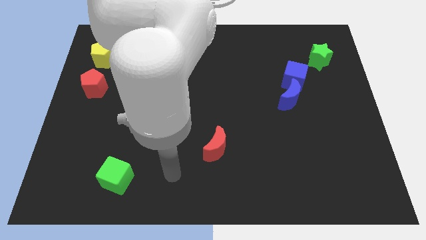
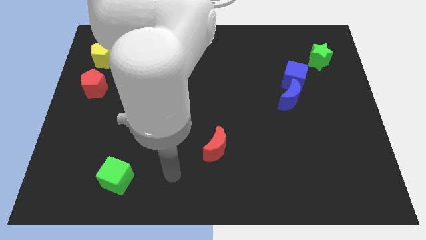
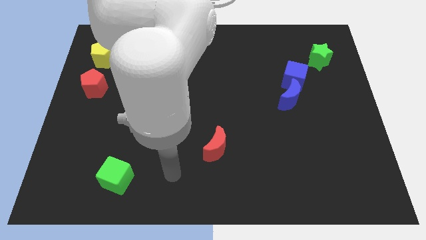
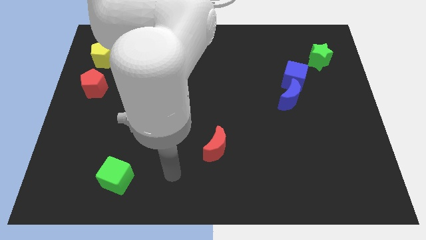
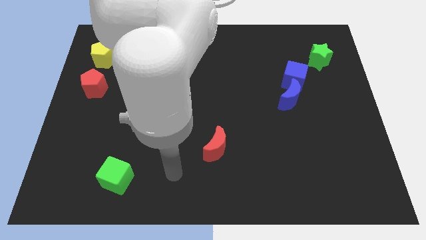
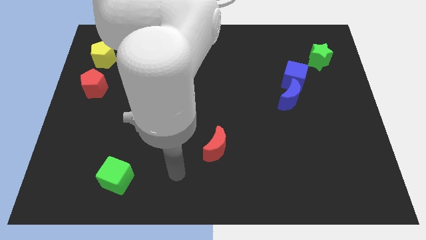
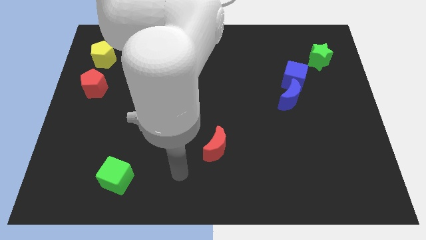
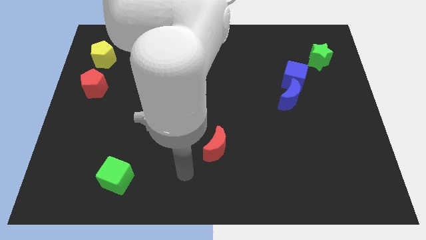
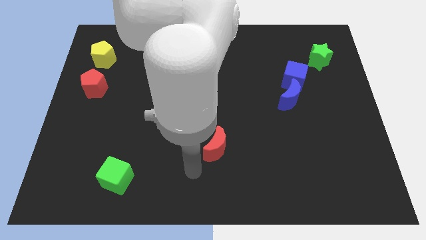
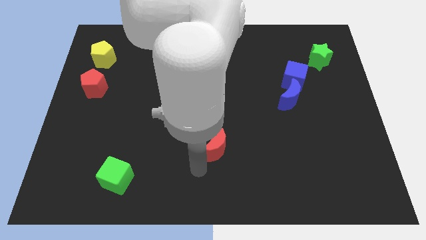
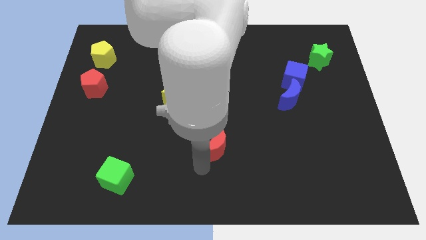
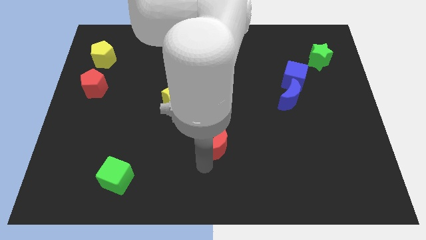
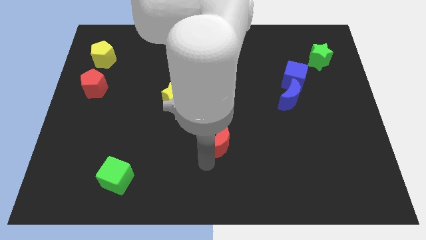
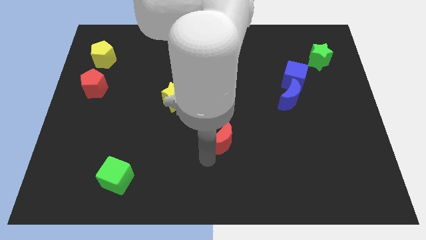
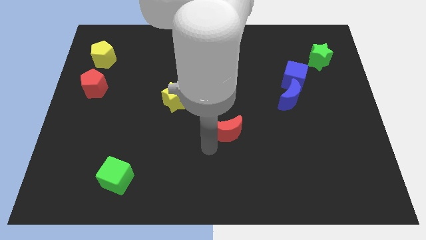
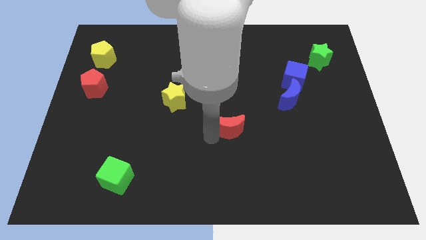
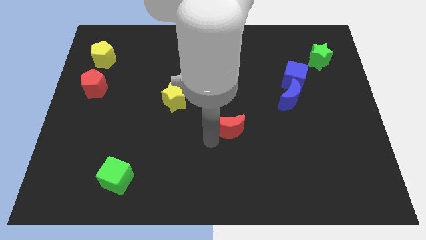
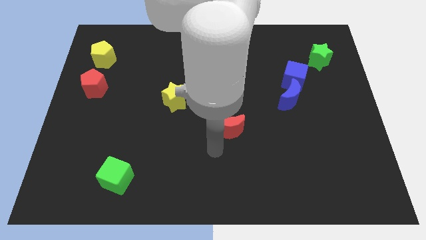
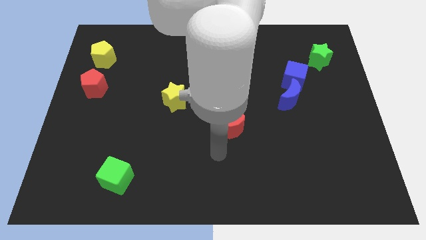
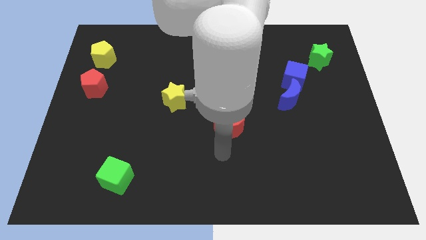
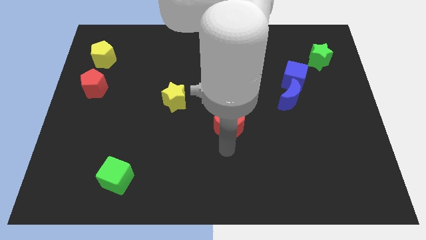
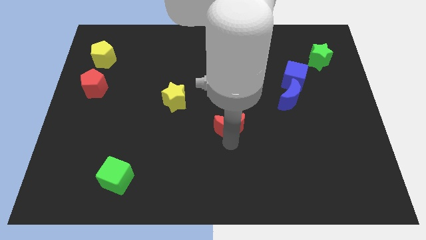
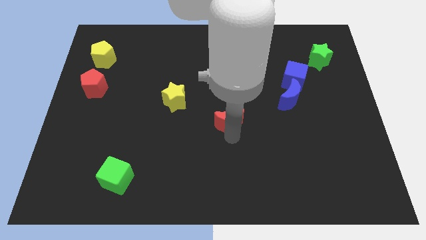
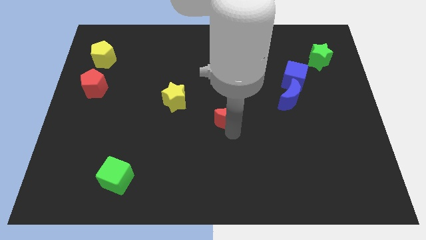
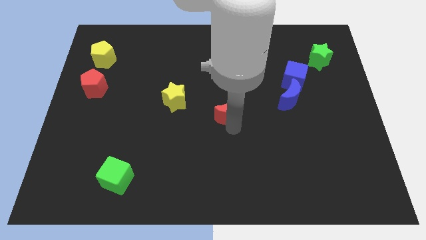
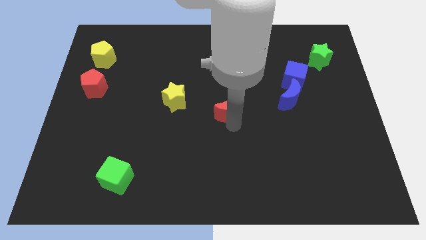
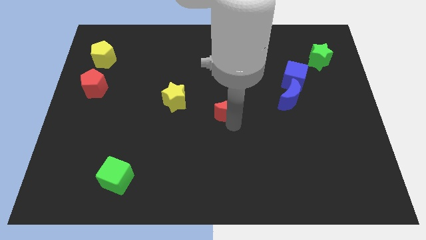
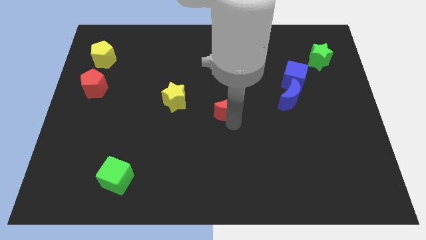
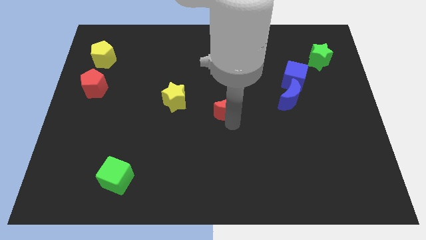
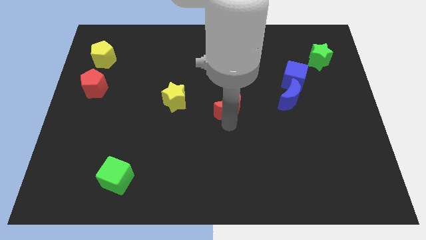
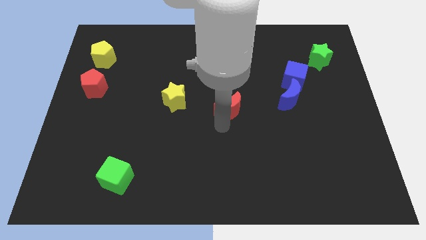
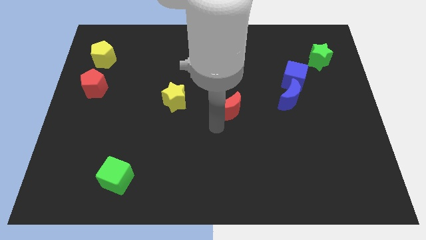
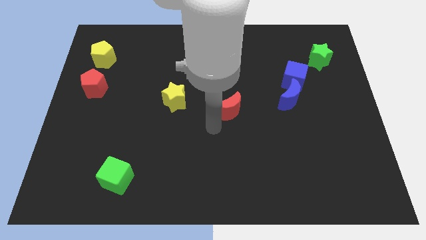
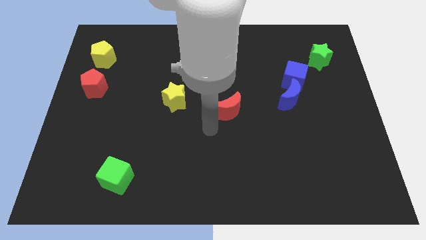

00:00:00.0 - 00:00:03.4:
place the red crescent in between yellow star and blue crescent

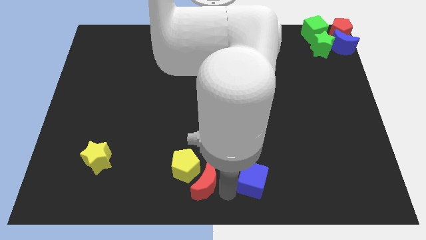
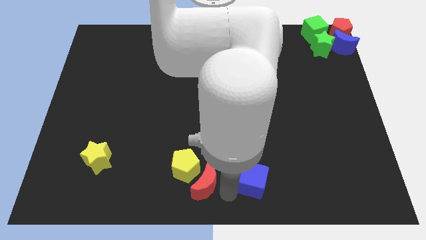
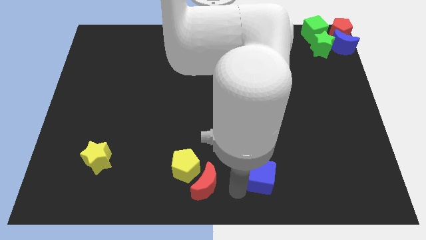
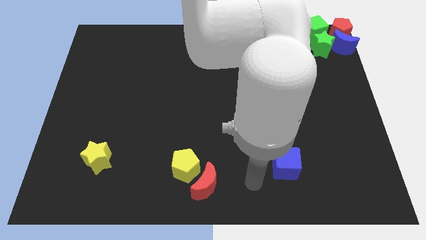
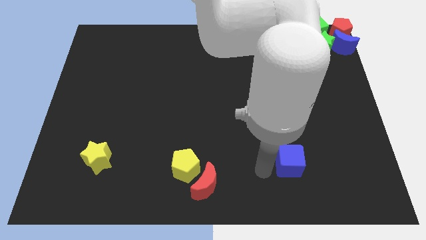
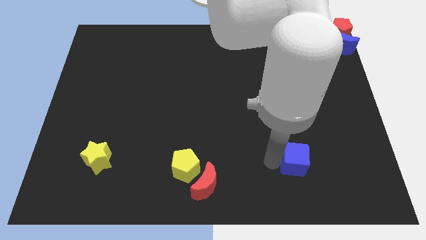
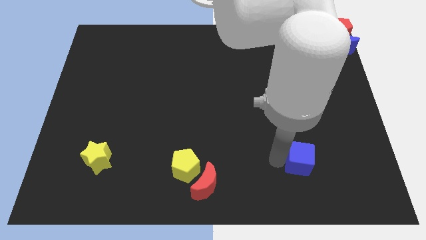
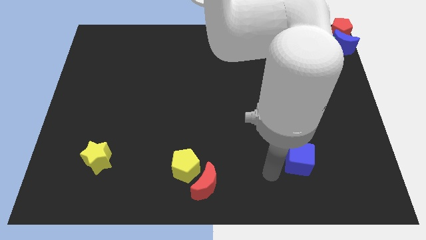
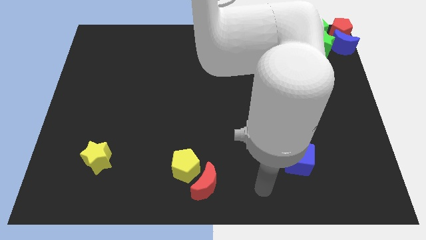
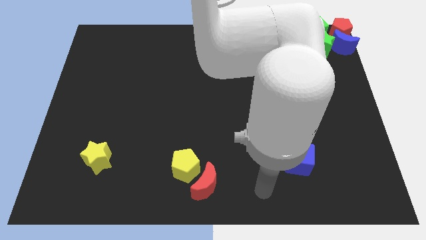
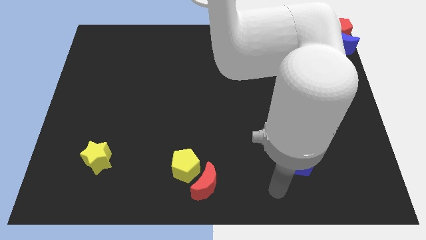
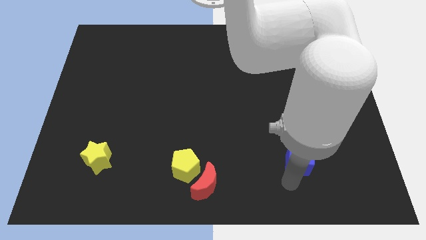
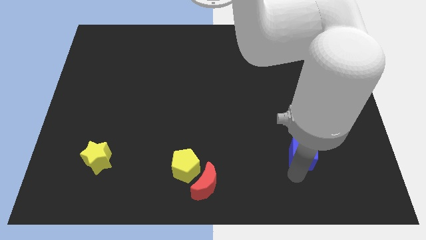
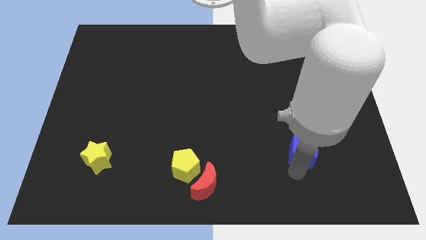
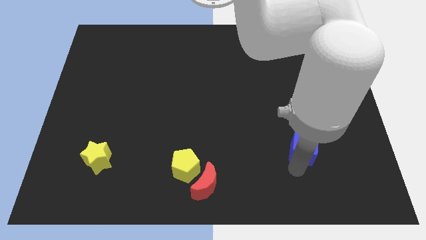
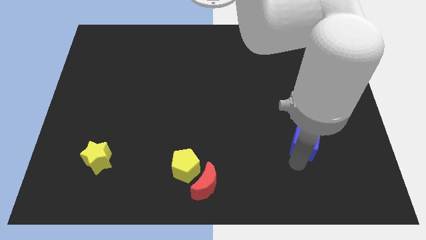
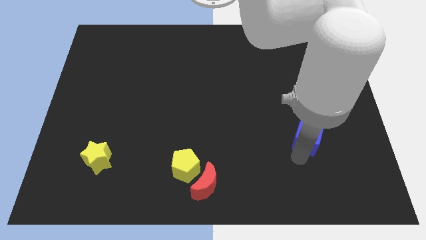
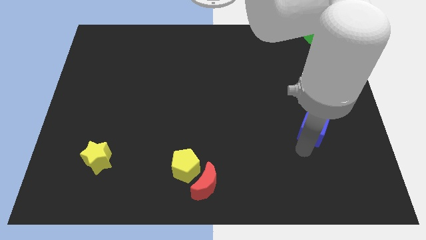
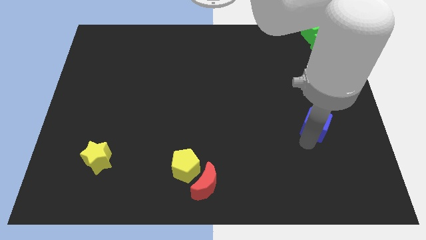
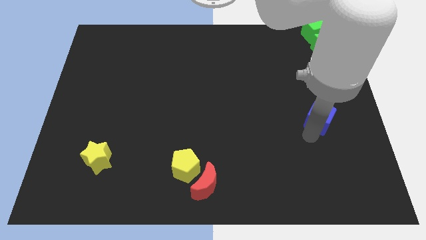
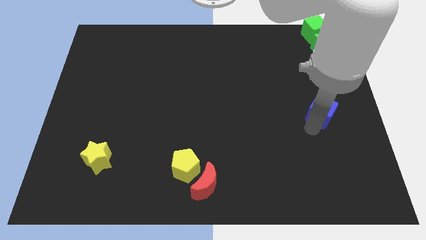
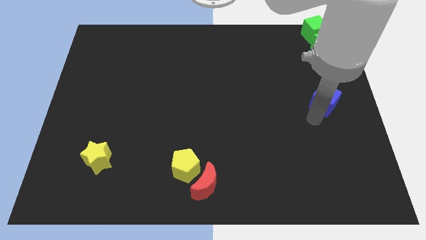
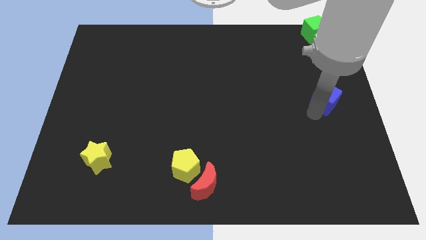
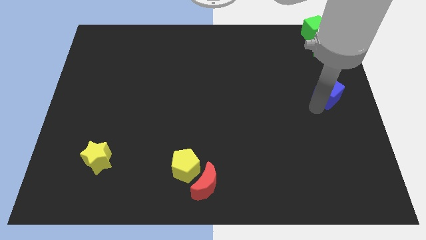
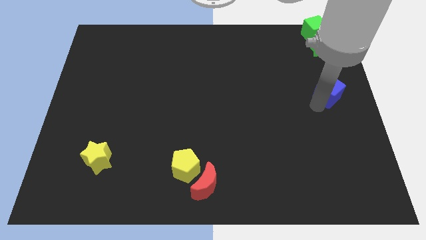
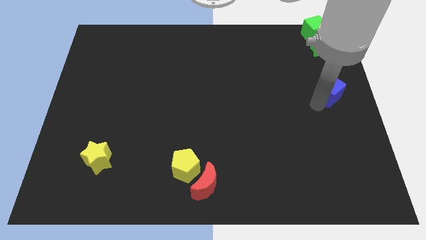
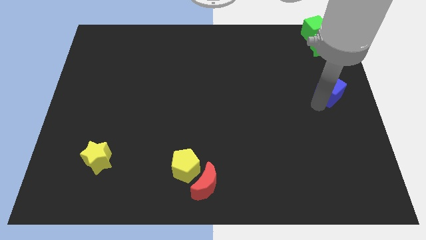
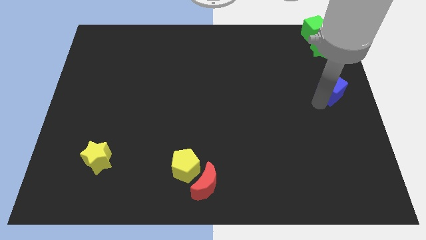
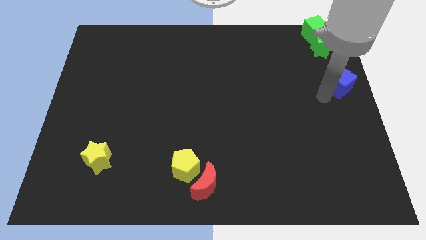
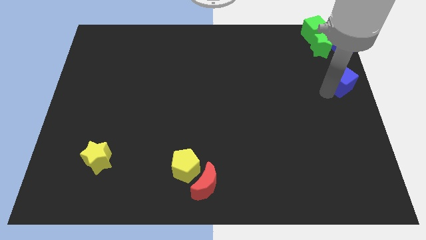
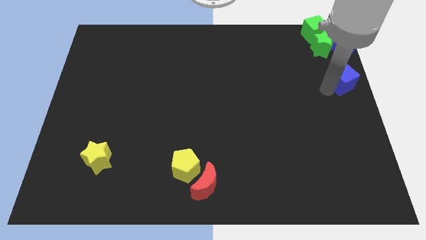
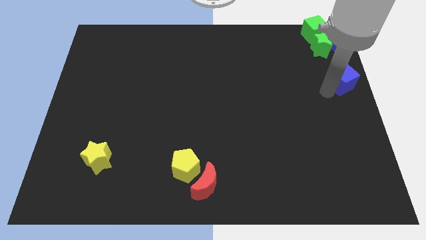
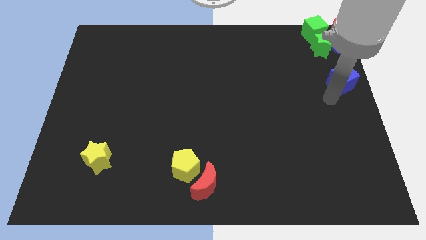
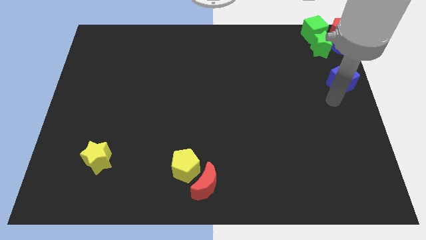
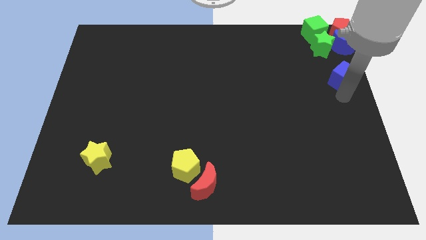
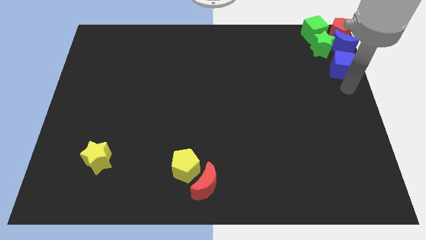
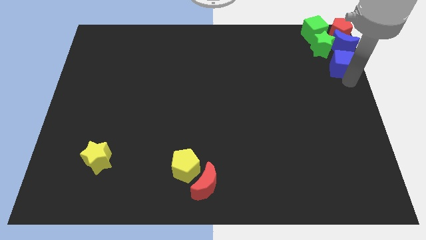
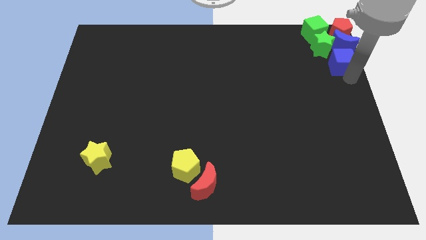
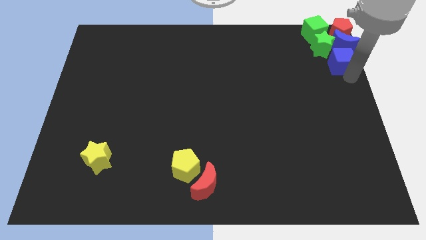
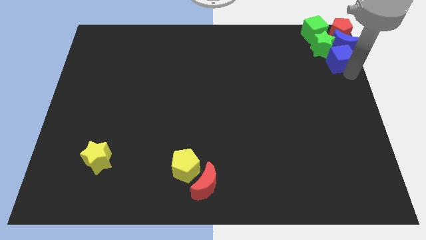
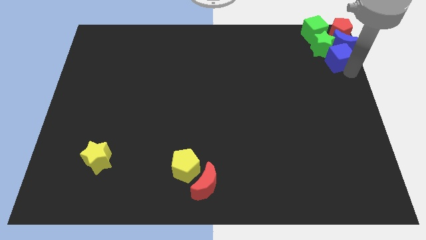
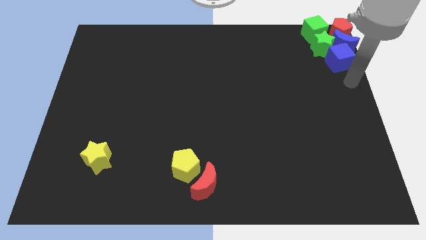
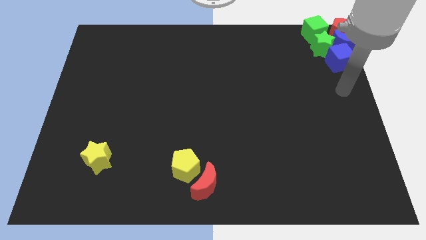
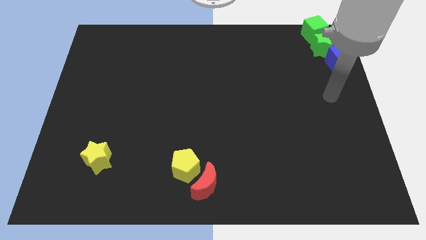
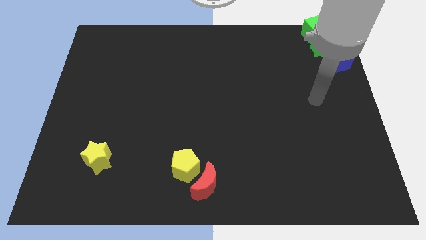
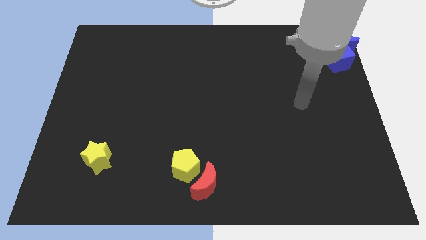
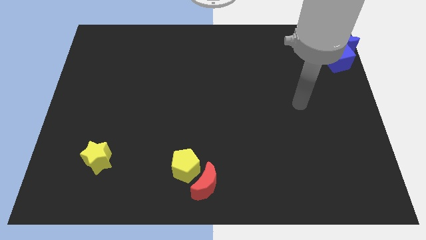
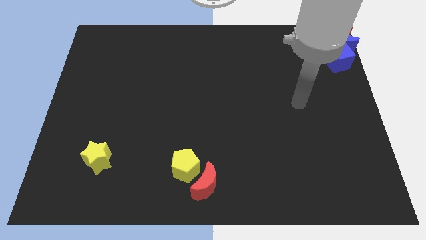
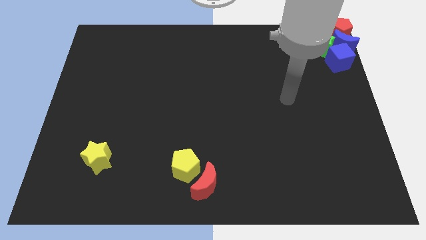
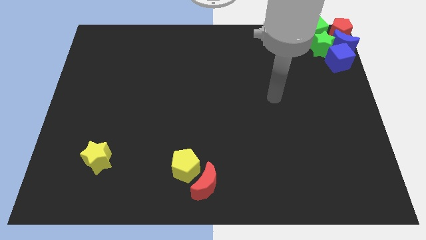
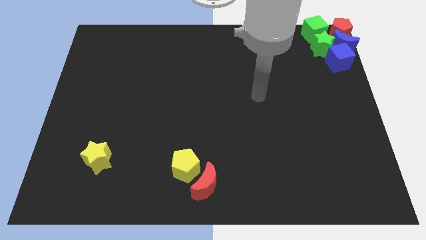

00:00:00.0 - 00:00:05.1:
push the blue cube into the group of blocks

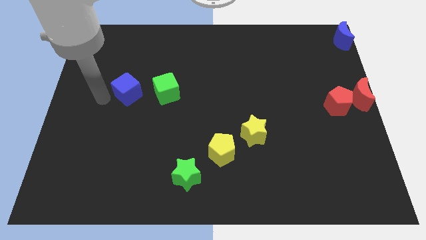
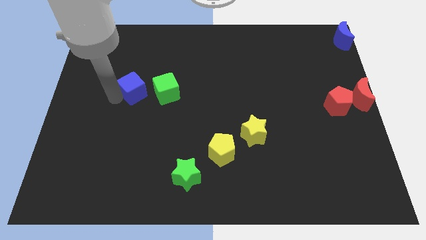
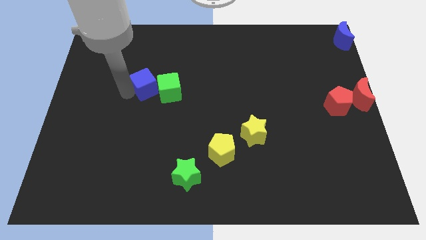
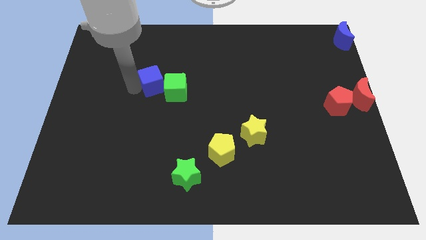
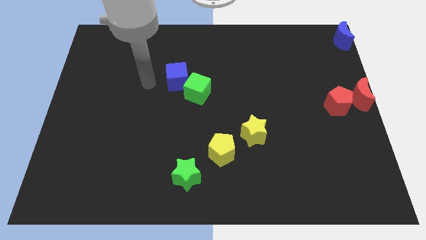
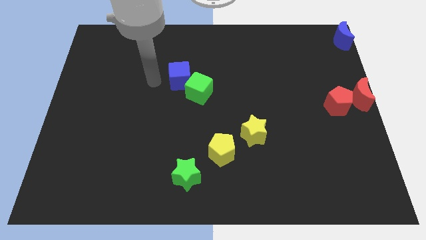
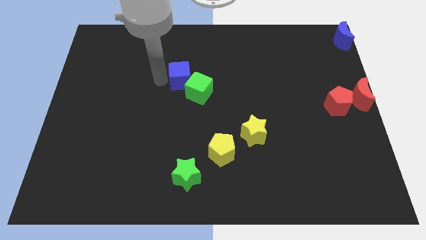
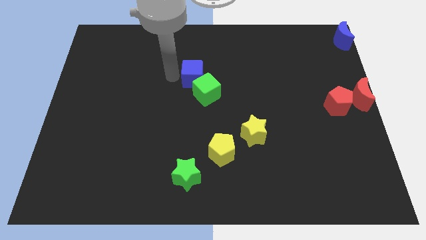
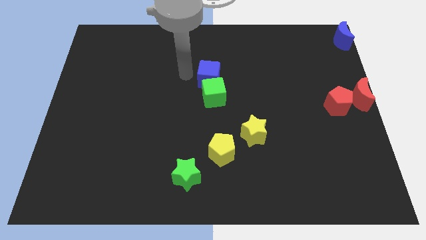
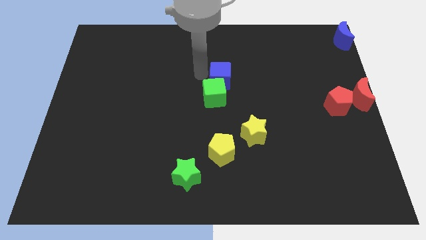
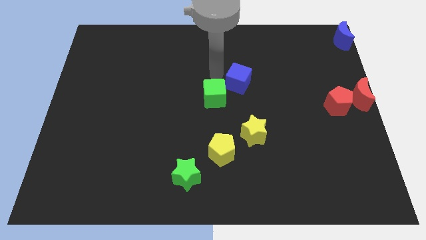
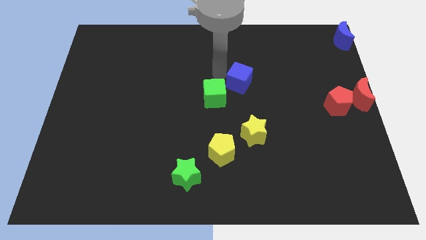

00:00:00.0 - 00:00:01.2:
push the blue cube away from the green cube
